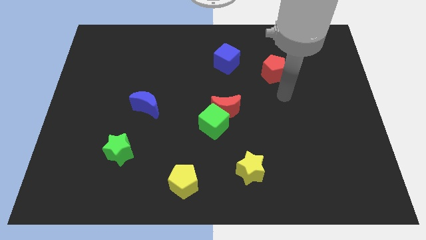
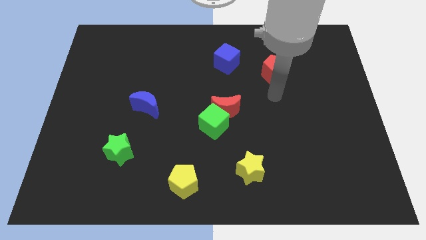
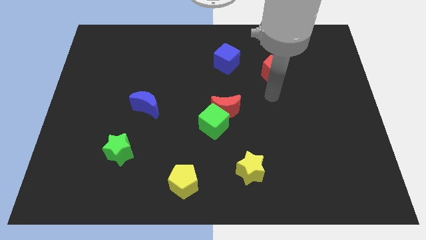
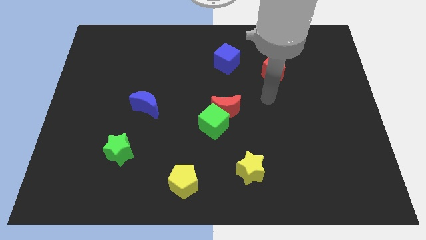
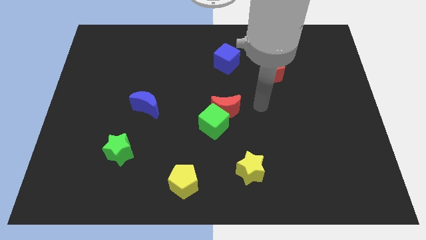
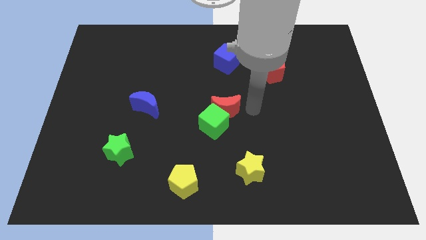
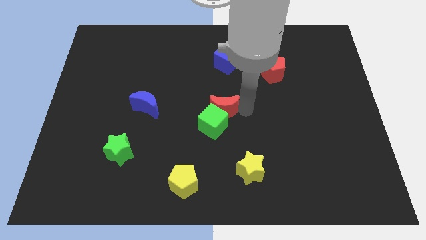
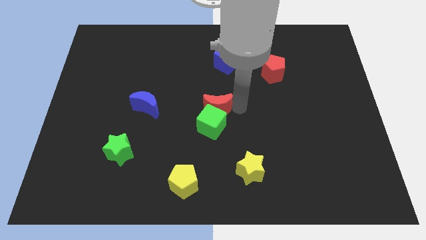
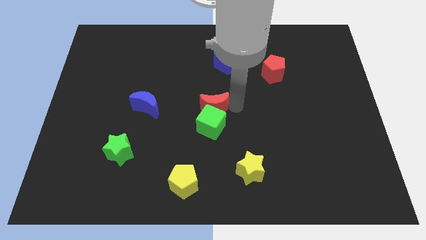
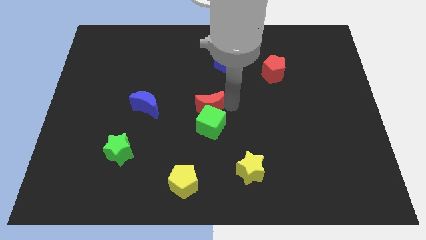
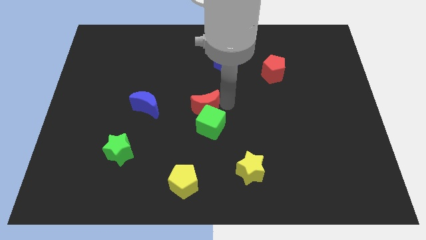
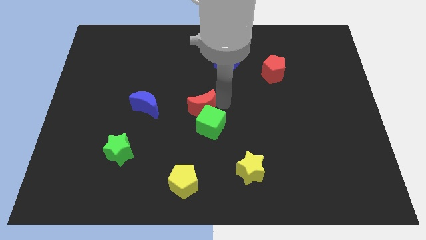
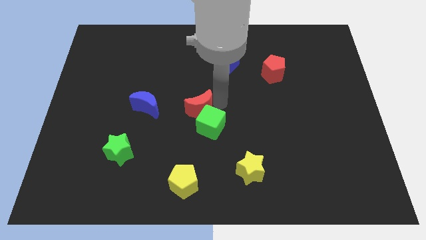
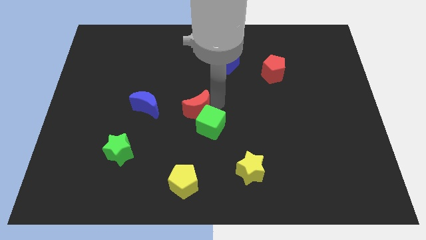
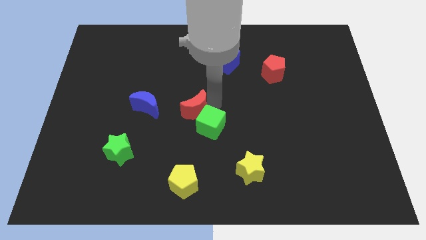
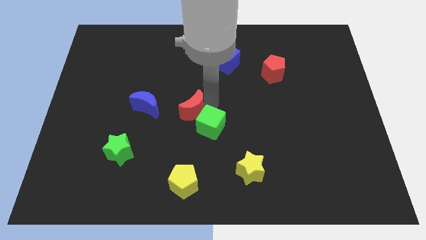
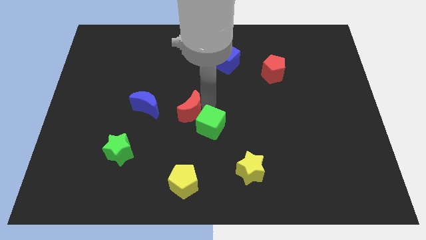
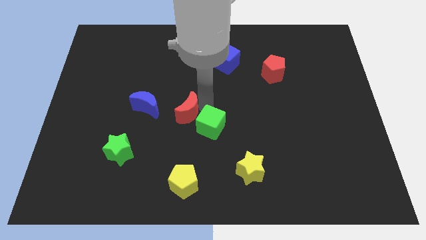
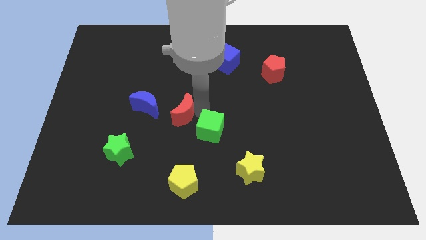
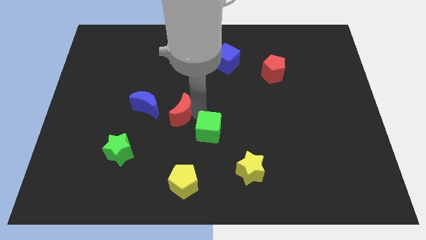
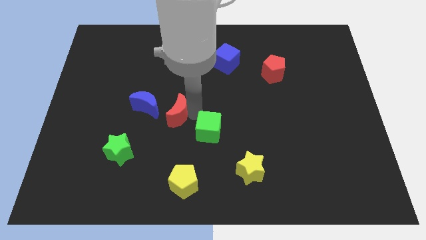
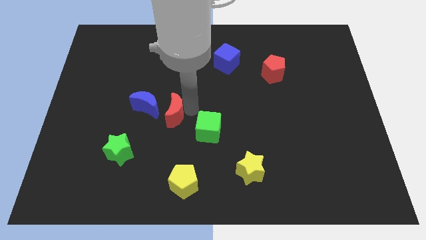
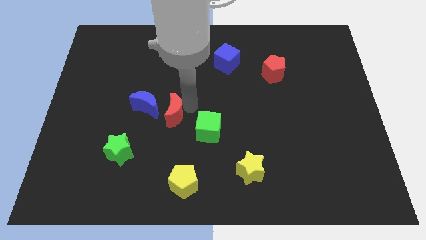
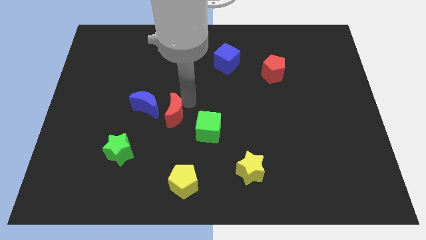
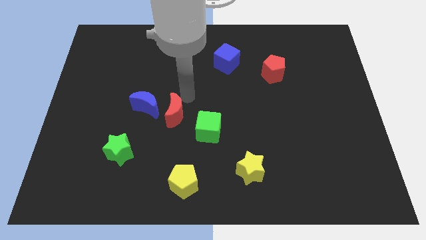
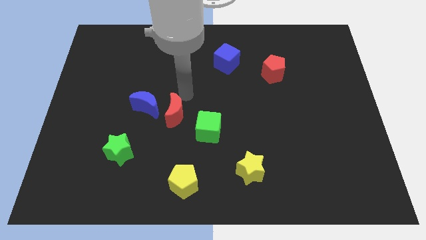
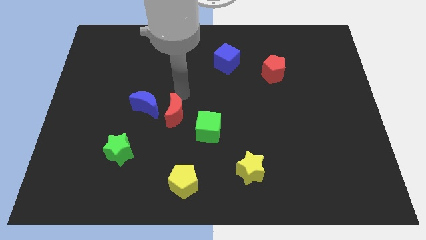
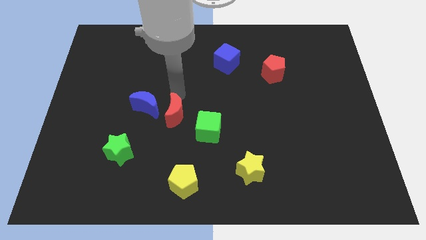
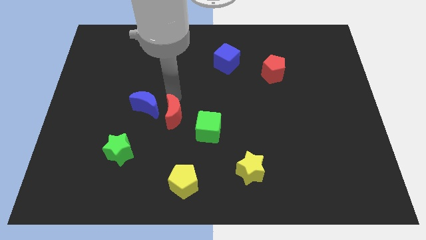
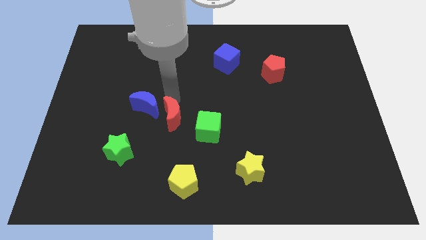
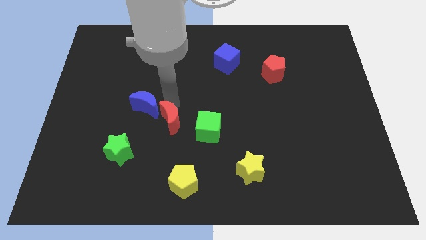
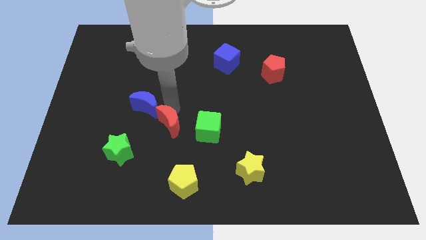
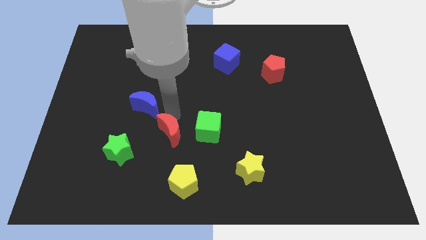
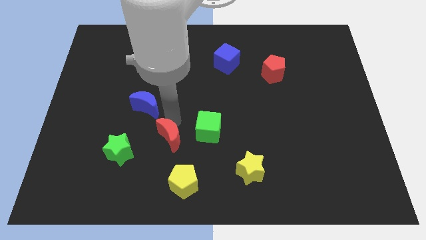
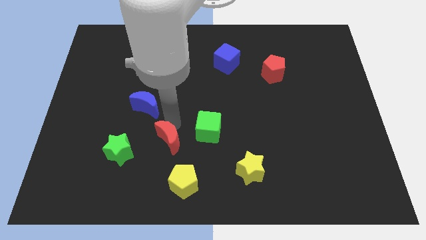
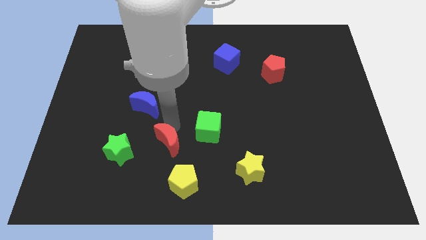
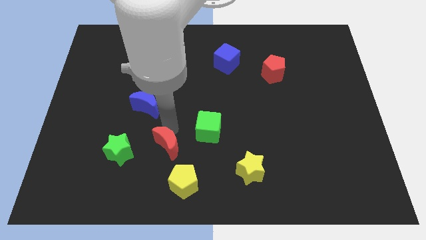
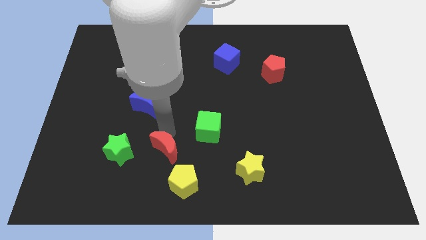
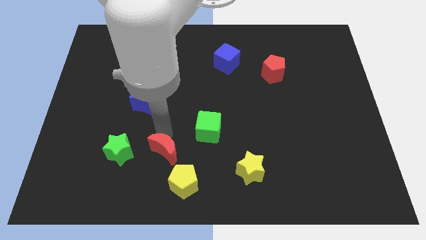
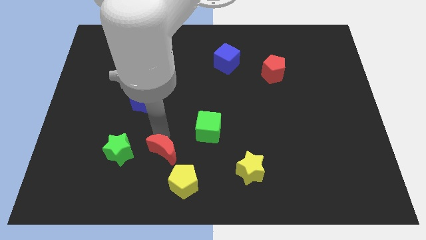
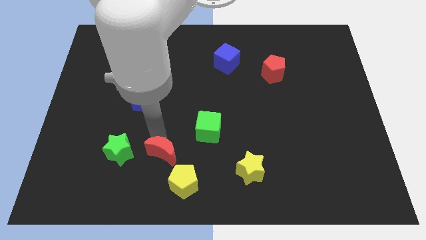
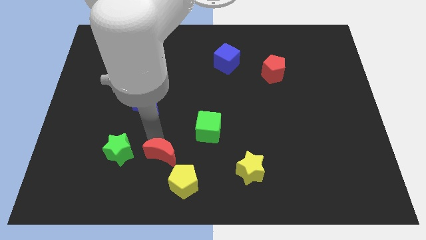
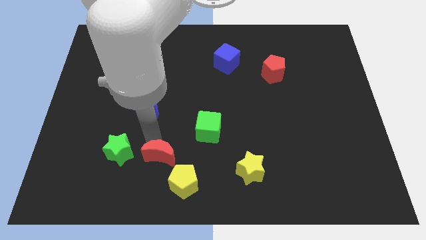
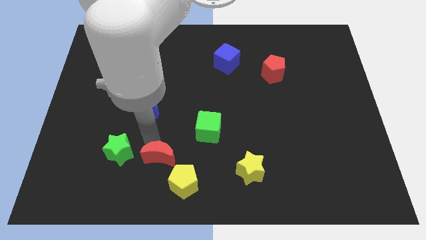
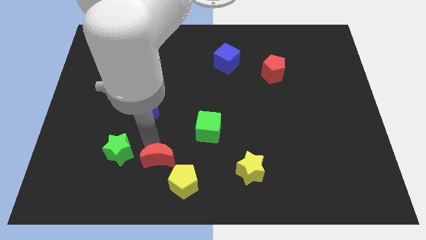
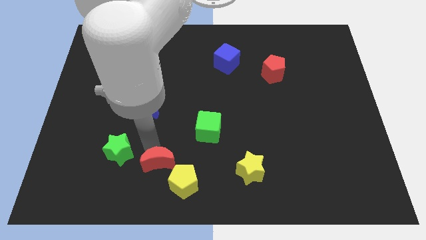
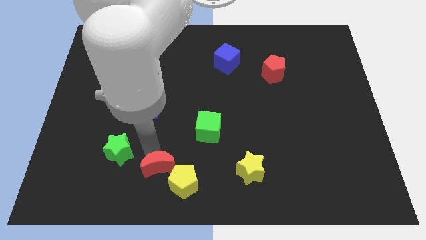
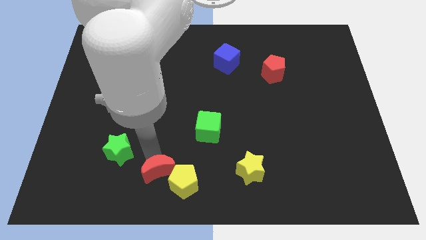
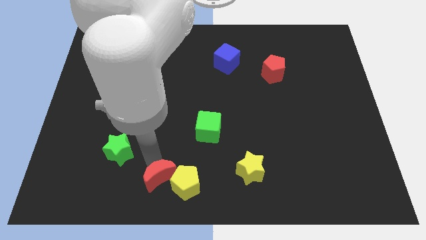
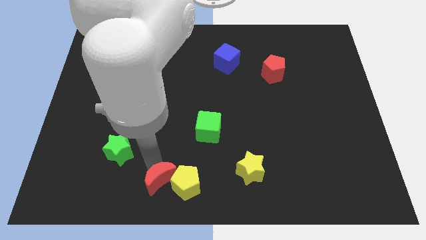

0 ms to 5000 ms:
slide the red moon towards the yellow pentagon

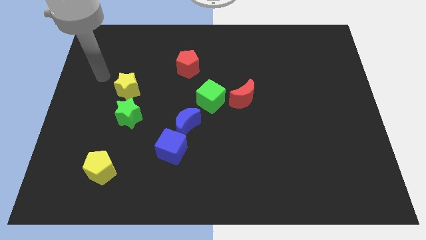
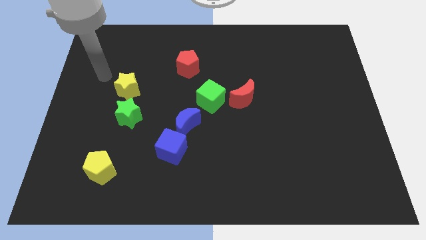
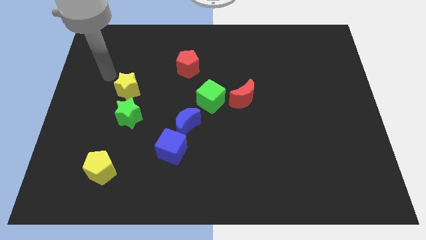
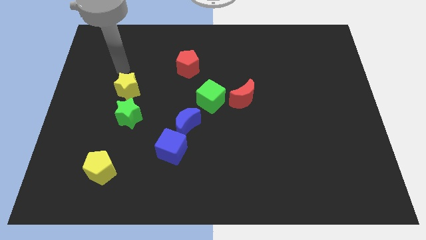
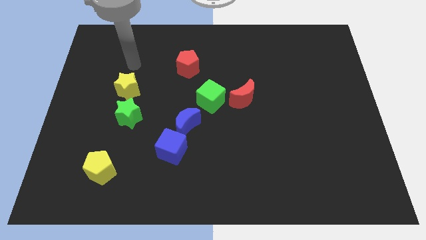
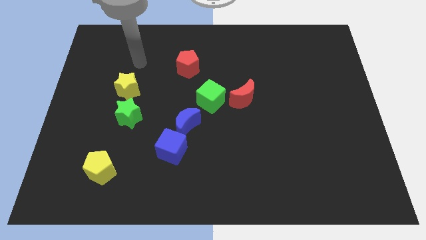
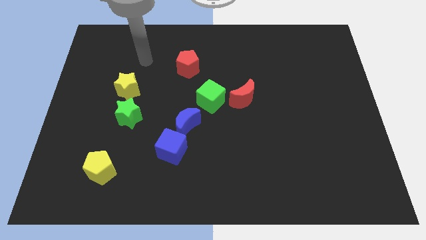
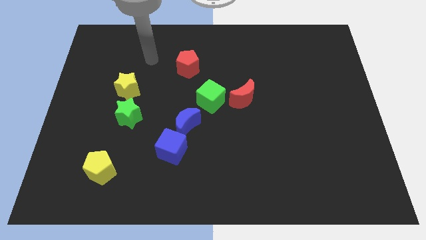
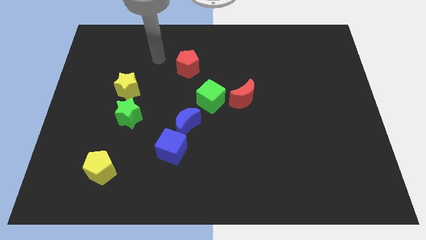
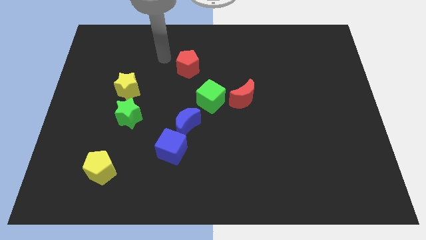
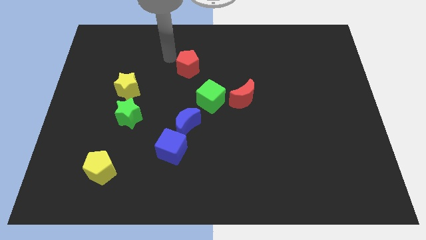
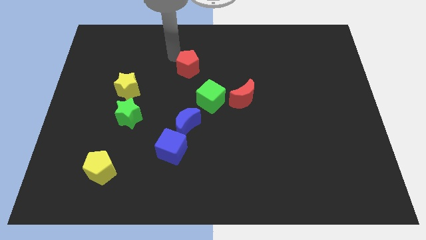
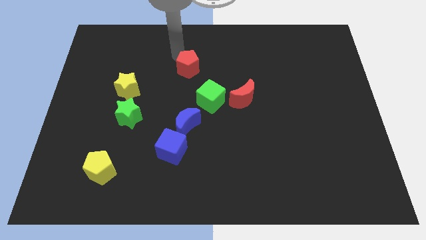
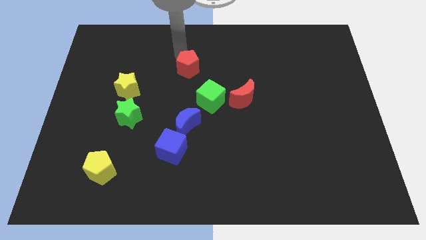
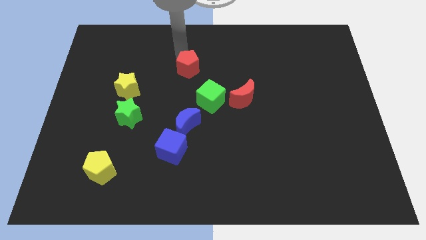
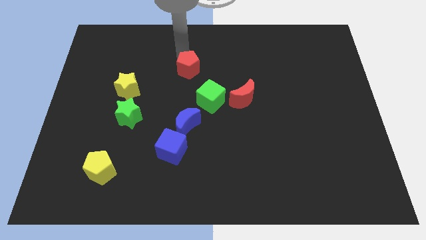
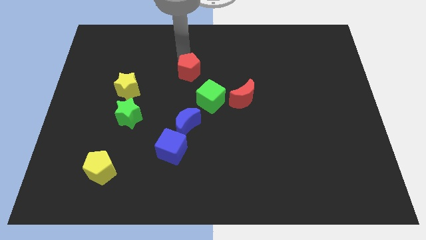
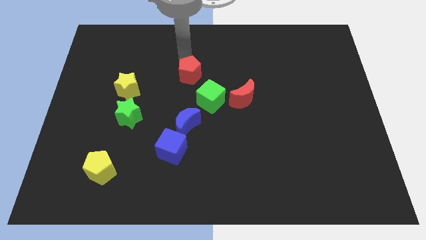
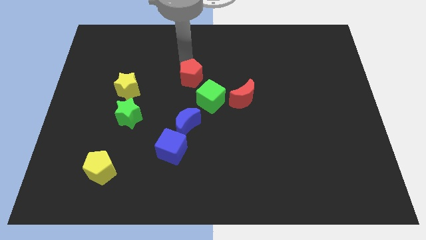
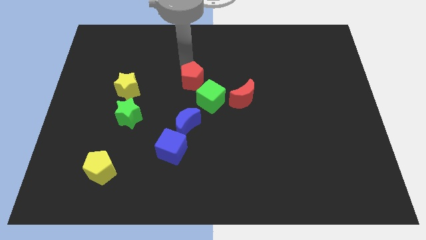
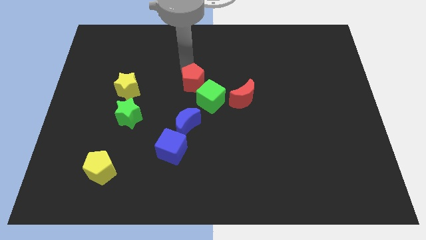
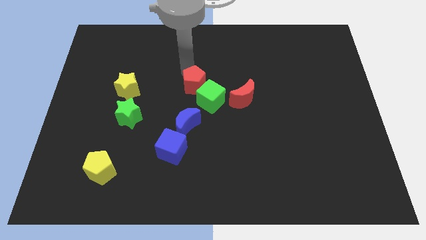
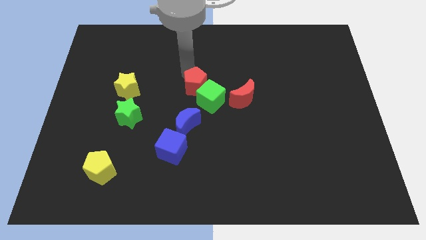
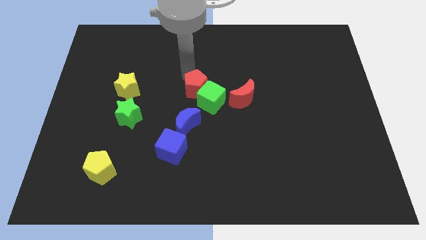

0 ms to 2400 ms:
push the red pentagon towards the green cube

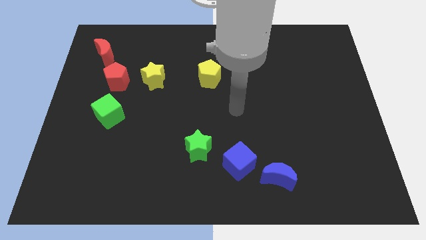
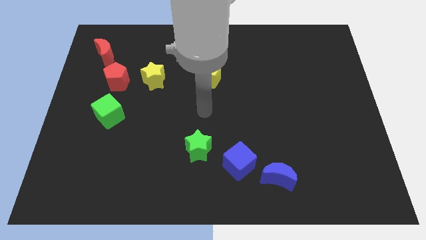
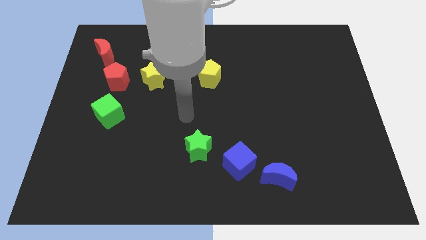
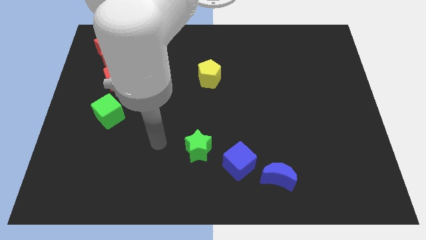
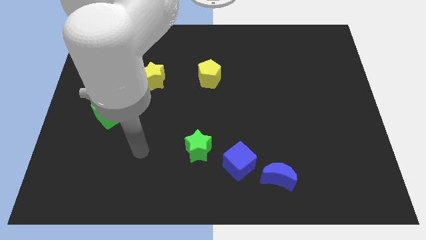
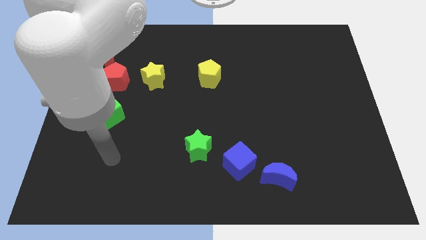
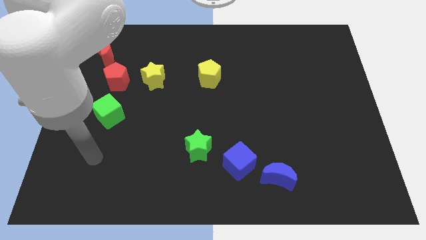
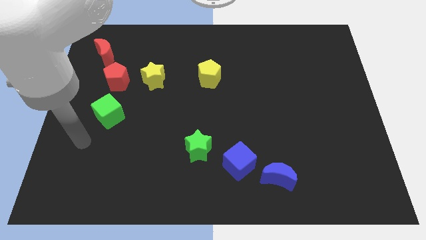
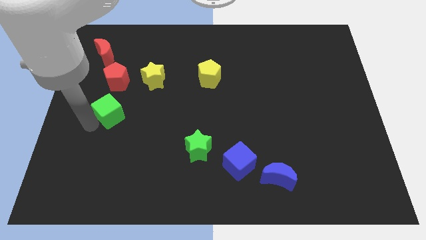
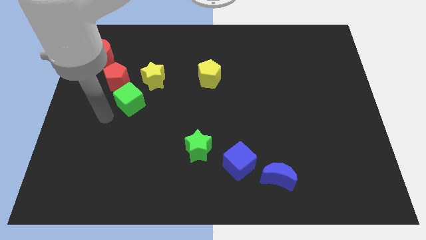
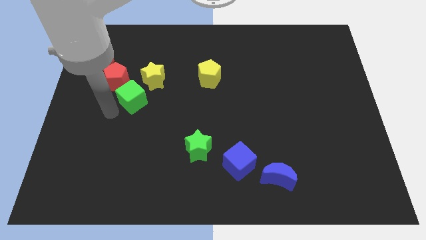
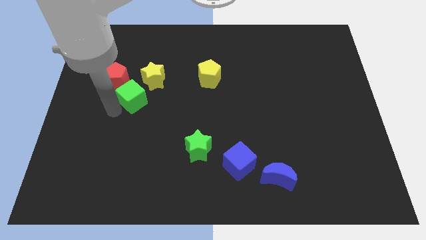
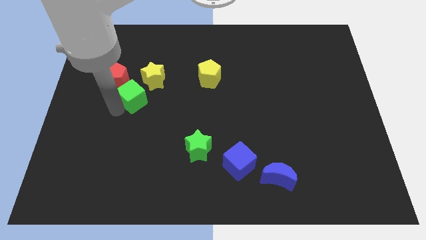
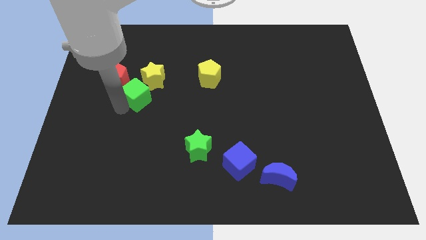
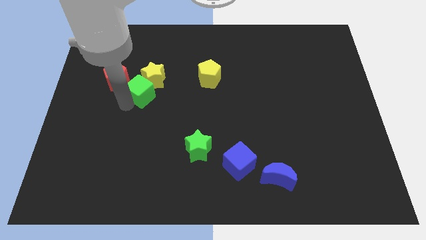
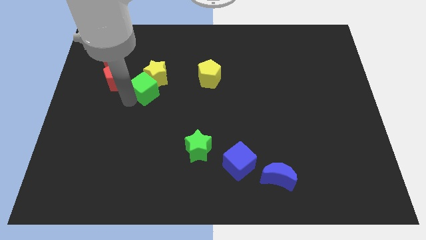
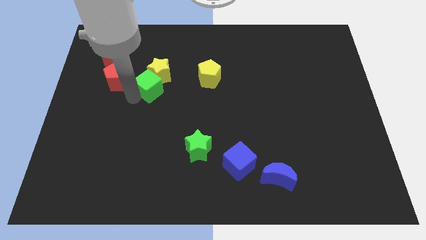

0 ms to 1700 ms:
put the green cube towards the yellow star
